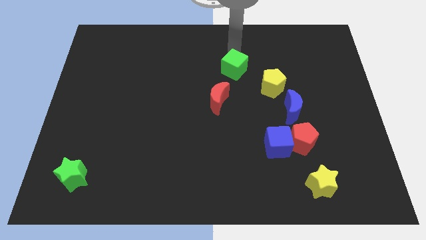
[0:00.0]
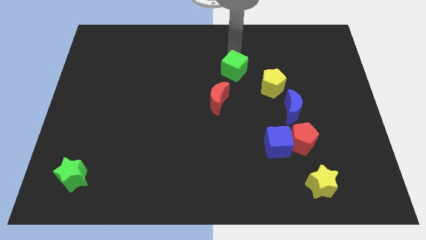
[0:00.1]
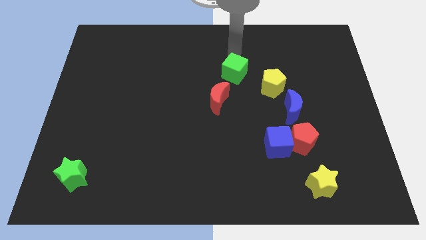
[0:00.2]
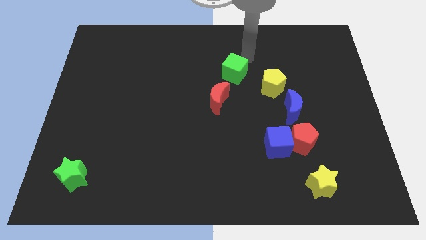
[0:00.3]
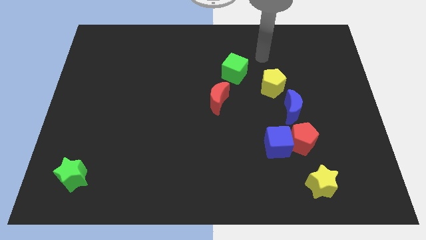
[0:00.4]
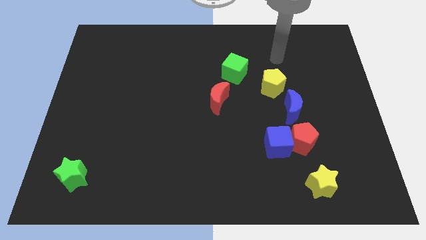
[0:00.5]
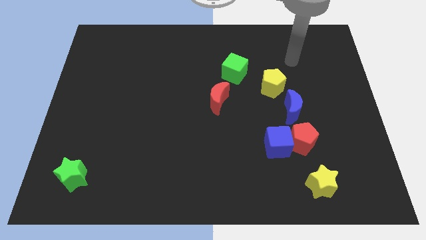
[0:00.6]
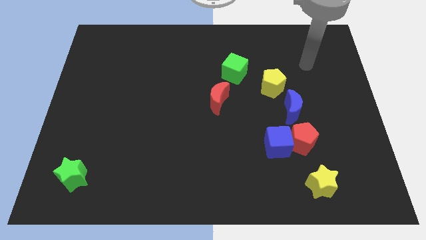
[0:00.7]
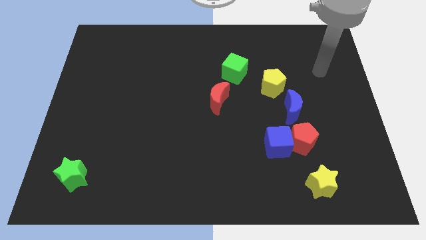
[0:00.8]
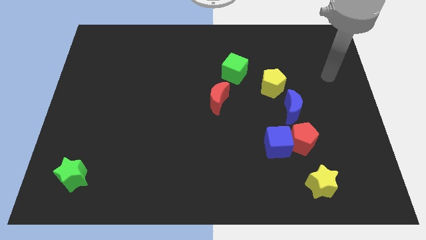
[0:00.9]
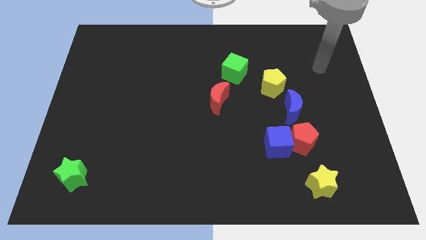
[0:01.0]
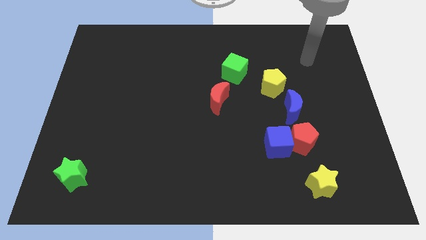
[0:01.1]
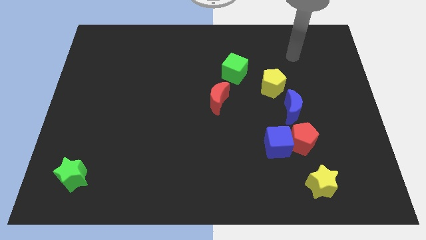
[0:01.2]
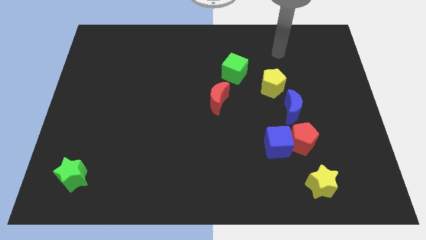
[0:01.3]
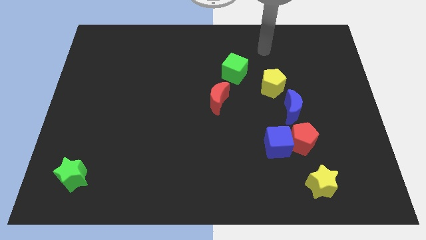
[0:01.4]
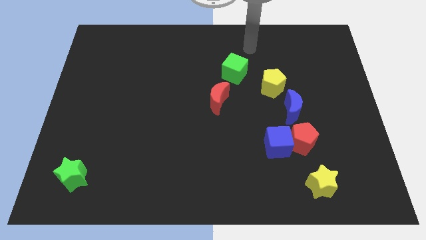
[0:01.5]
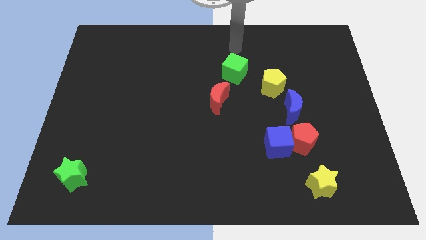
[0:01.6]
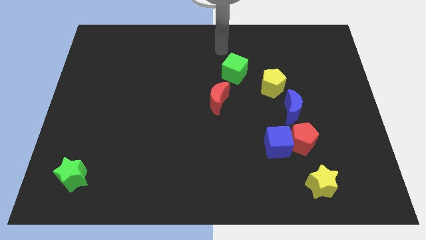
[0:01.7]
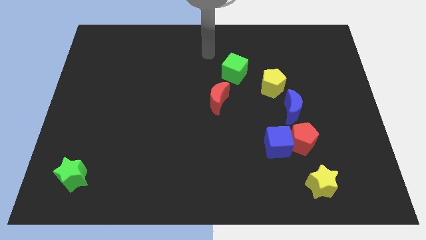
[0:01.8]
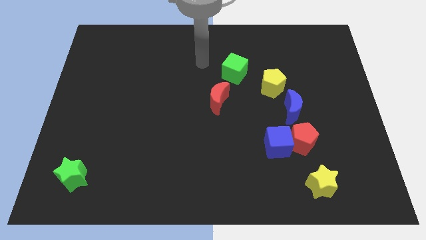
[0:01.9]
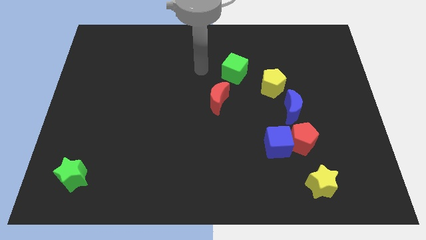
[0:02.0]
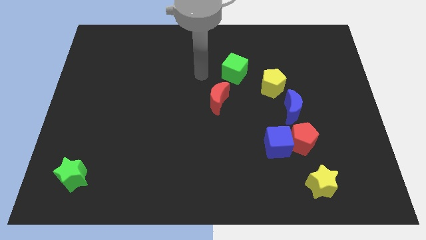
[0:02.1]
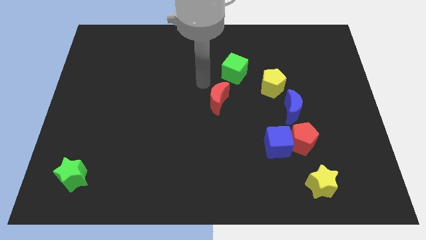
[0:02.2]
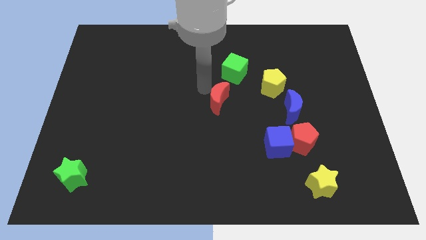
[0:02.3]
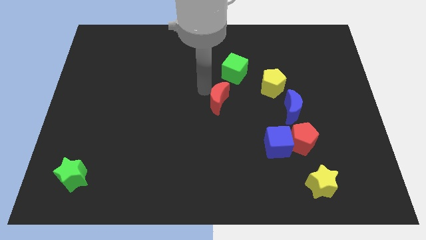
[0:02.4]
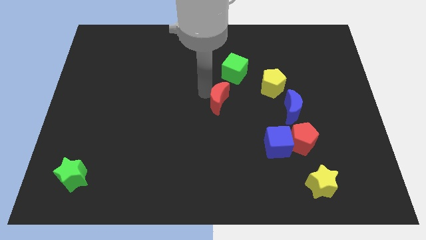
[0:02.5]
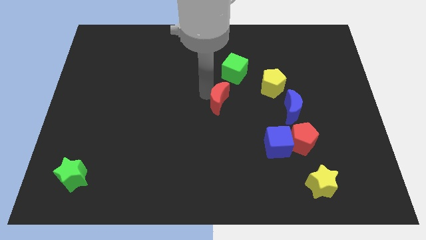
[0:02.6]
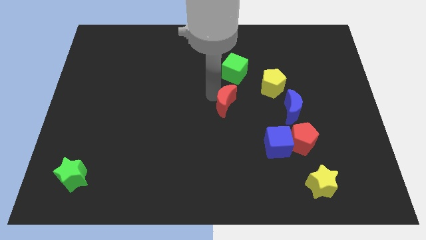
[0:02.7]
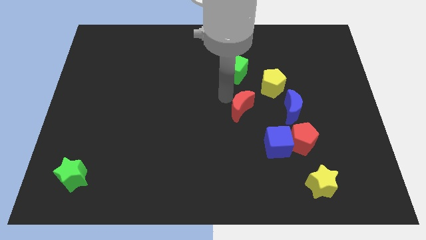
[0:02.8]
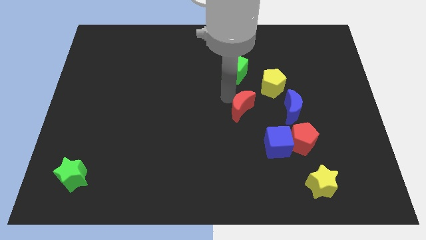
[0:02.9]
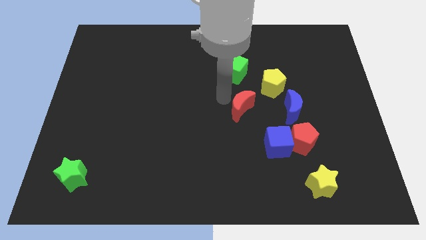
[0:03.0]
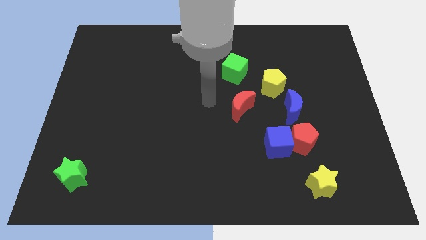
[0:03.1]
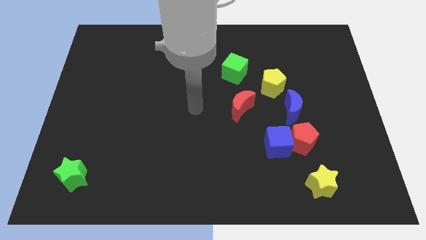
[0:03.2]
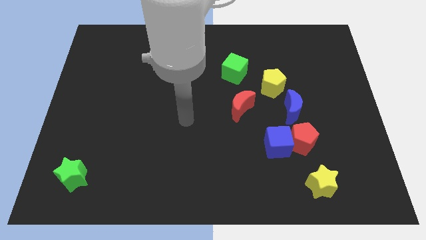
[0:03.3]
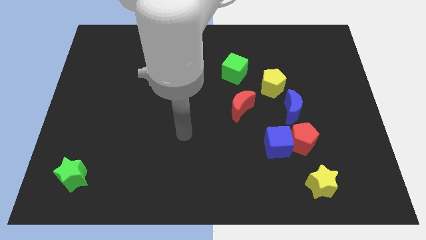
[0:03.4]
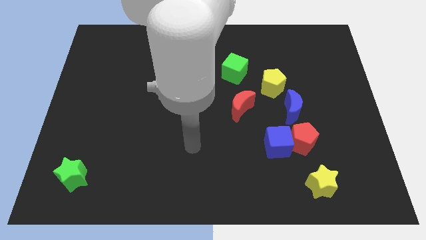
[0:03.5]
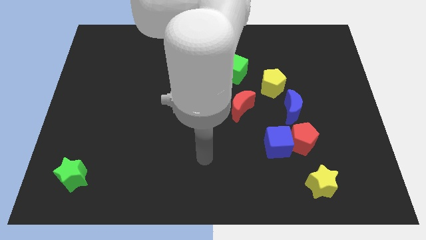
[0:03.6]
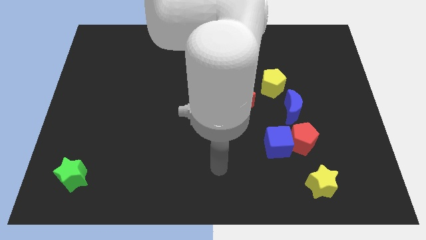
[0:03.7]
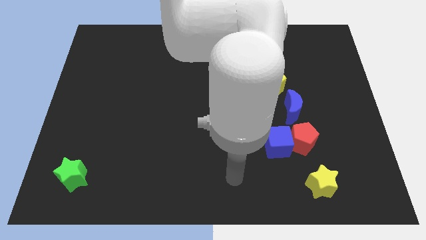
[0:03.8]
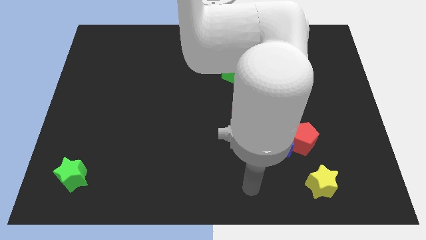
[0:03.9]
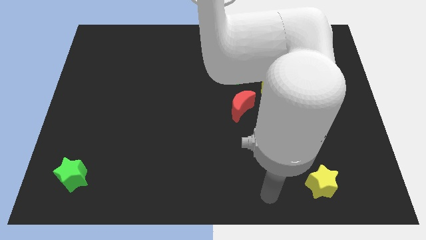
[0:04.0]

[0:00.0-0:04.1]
push the red crescent parallel to the left of the blue crescent

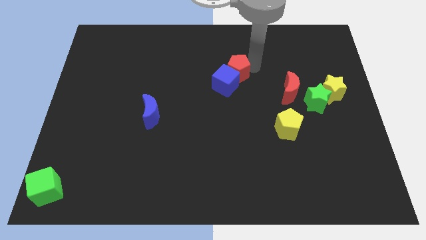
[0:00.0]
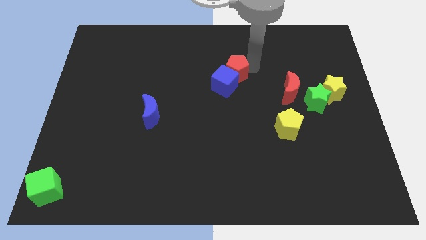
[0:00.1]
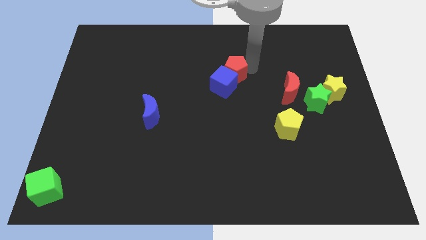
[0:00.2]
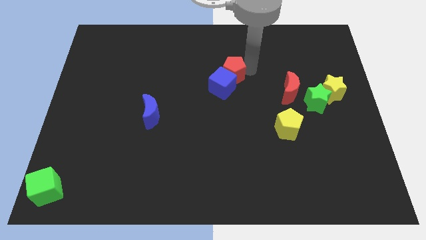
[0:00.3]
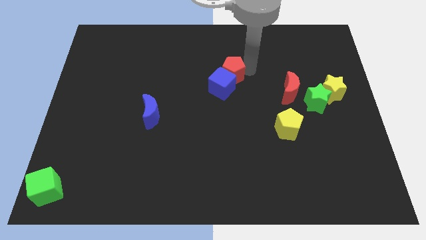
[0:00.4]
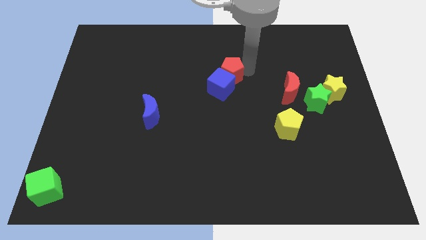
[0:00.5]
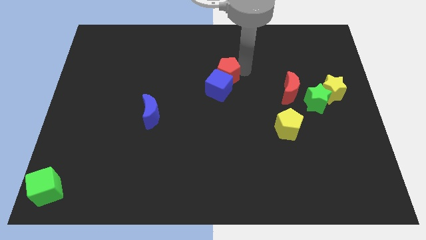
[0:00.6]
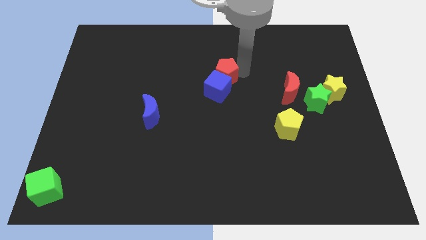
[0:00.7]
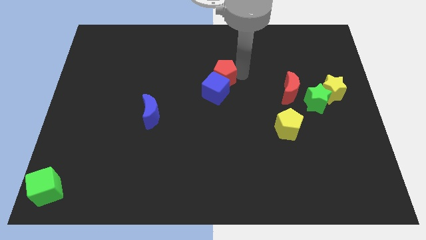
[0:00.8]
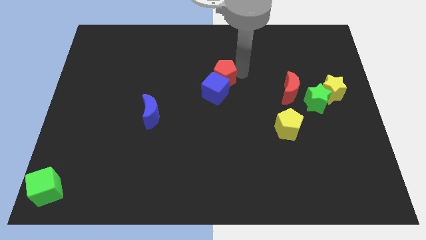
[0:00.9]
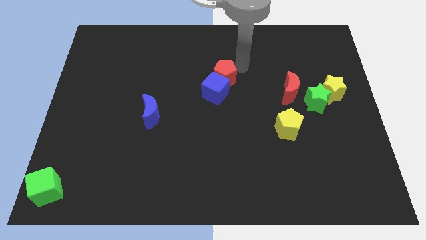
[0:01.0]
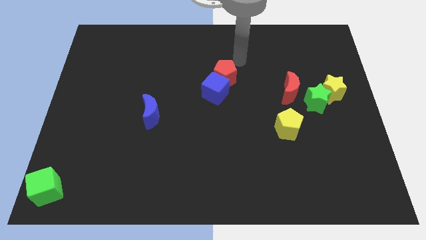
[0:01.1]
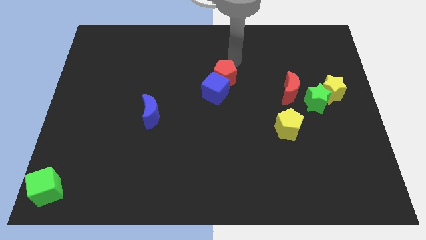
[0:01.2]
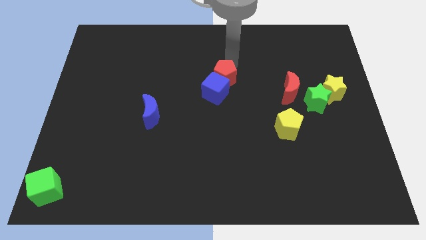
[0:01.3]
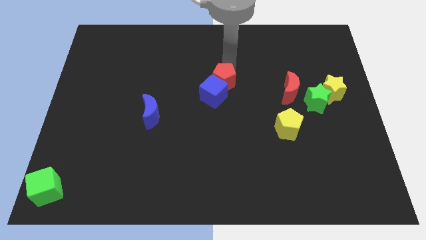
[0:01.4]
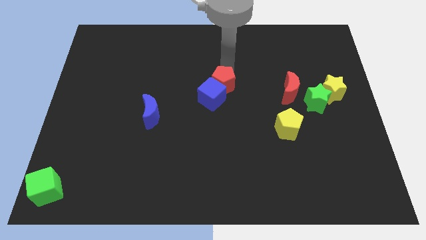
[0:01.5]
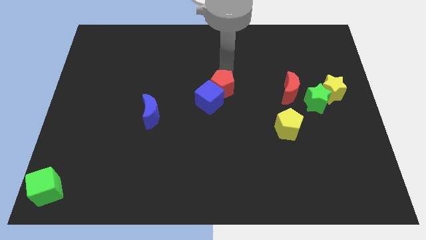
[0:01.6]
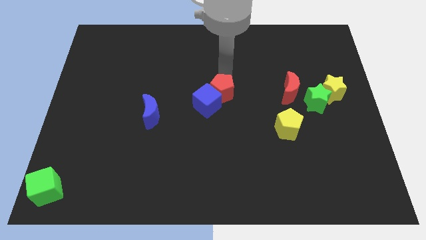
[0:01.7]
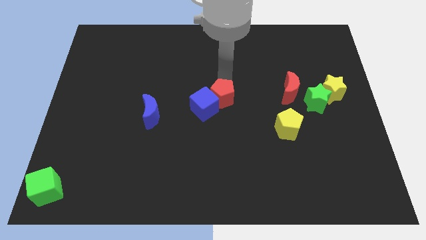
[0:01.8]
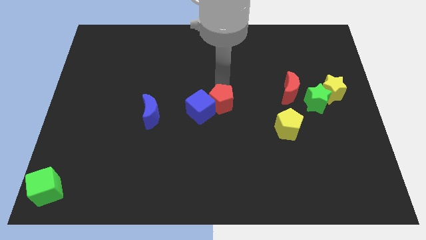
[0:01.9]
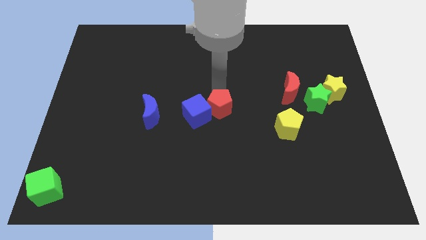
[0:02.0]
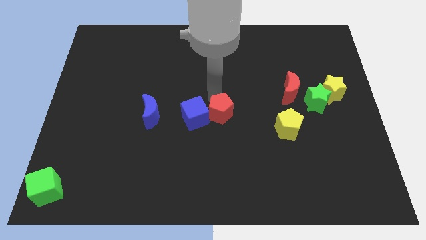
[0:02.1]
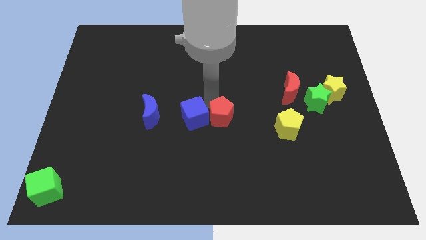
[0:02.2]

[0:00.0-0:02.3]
move the red pentagon and blue cube to the center

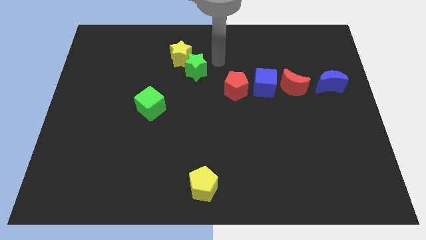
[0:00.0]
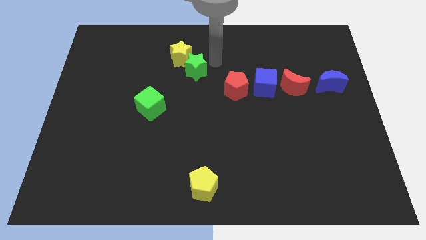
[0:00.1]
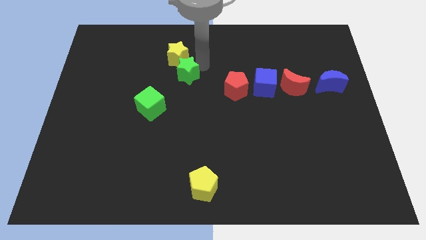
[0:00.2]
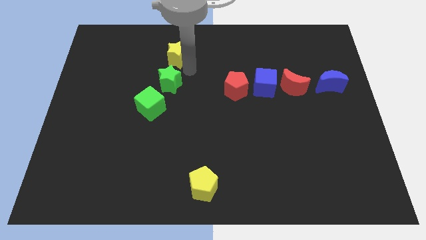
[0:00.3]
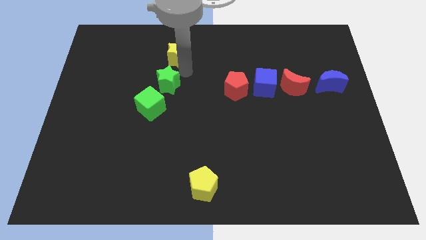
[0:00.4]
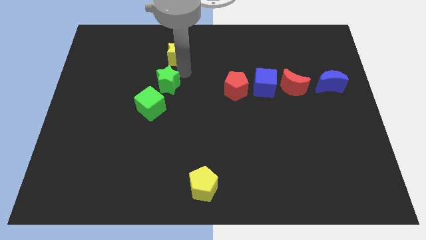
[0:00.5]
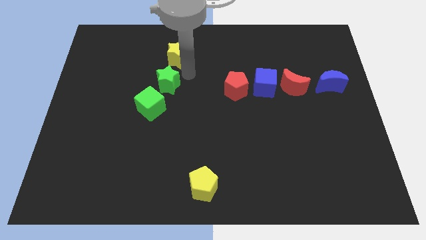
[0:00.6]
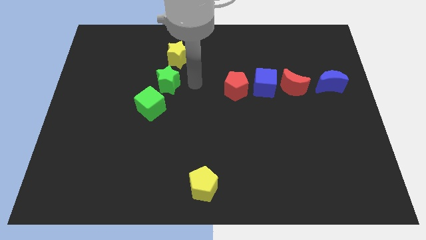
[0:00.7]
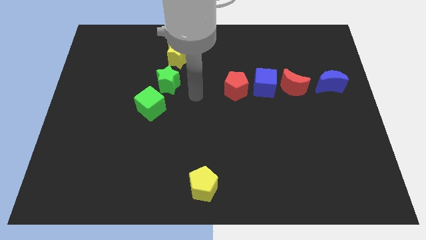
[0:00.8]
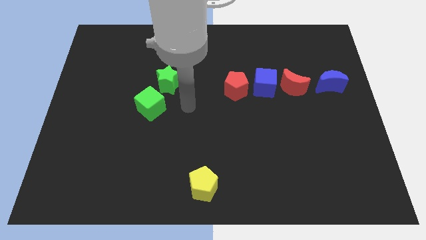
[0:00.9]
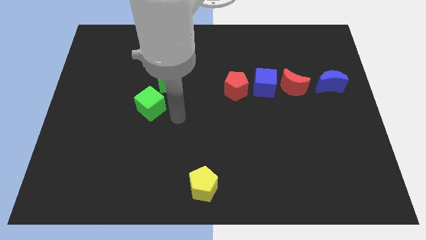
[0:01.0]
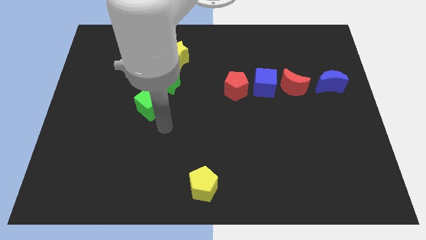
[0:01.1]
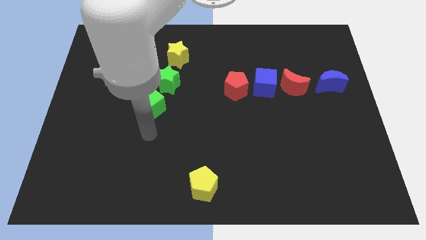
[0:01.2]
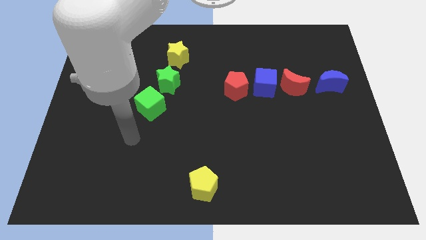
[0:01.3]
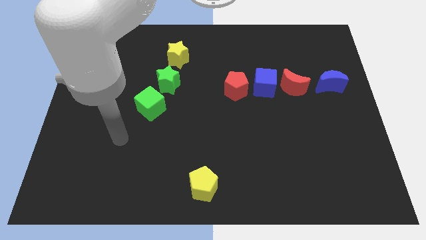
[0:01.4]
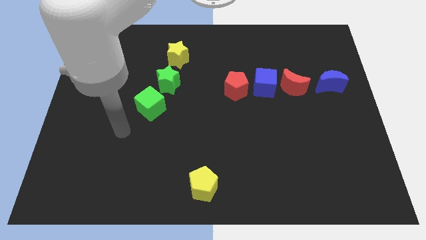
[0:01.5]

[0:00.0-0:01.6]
push the green star towards green cube

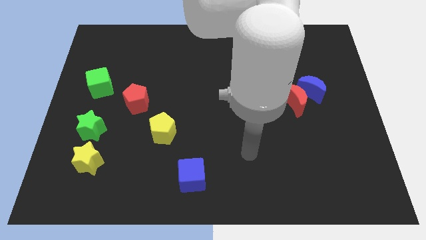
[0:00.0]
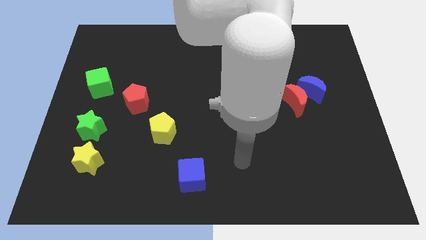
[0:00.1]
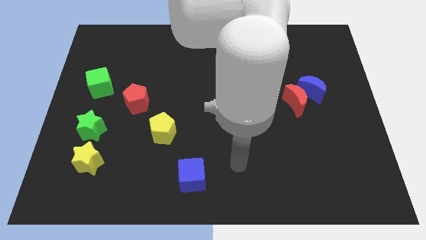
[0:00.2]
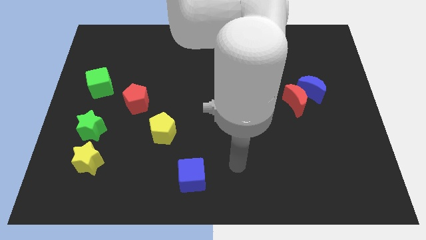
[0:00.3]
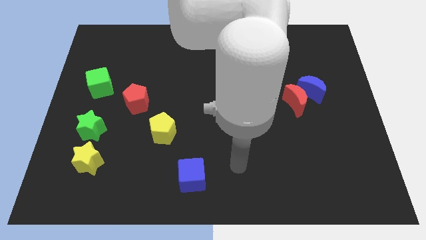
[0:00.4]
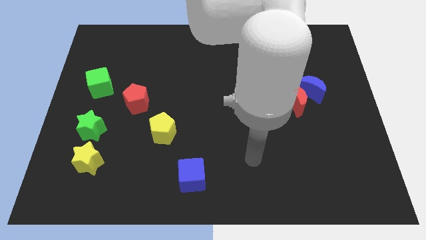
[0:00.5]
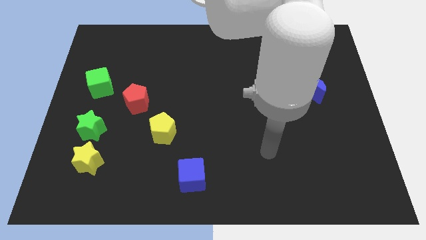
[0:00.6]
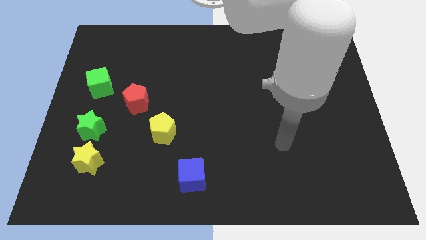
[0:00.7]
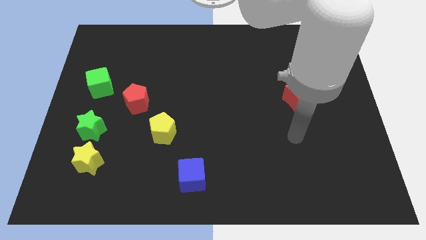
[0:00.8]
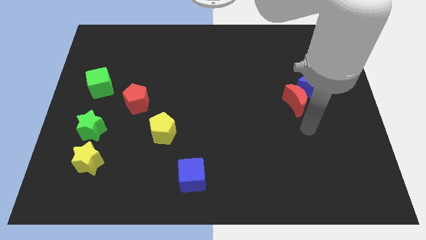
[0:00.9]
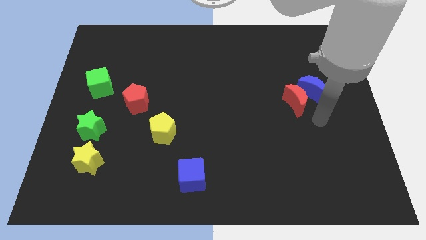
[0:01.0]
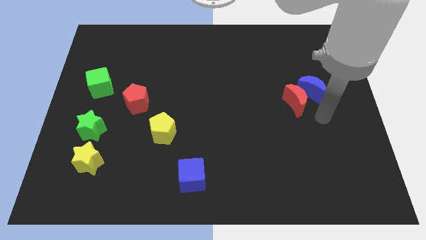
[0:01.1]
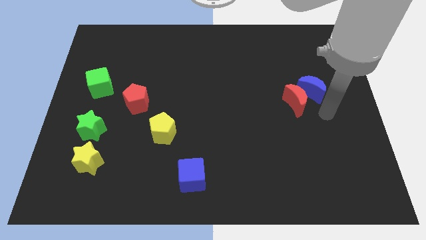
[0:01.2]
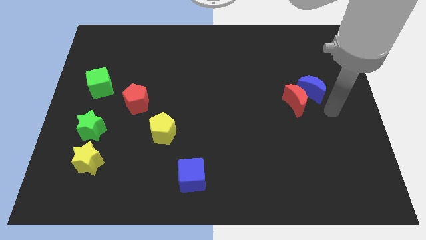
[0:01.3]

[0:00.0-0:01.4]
move your arm to the center right
